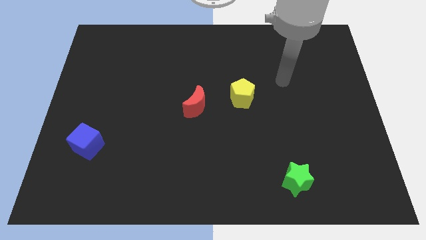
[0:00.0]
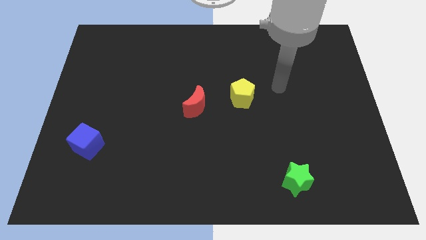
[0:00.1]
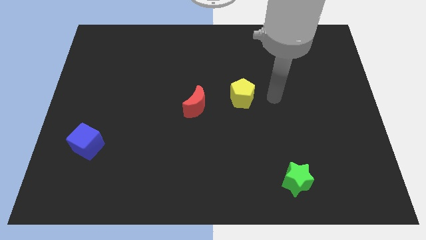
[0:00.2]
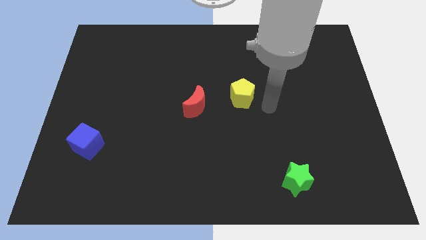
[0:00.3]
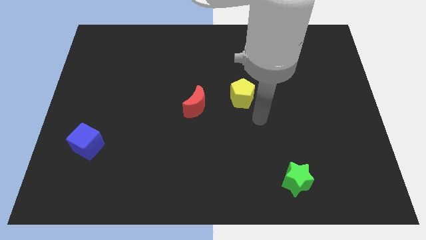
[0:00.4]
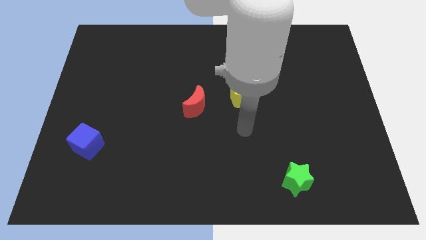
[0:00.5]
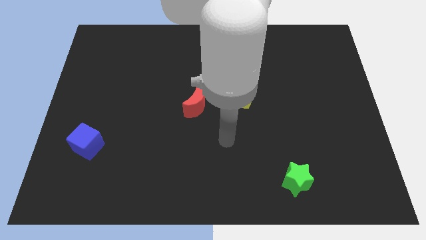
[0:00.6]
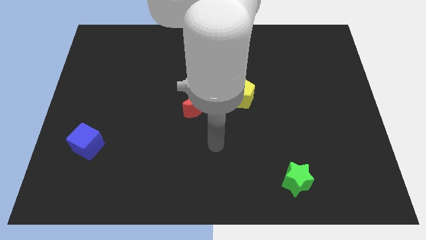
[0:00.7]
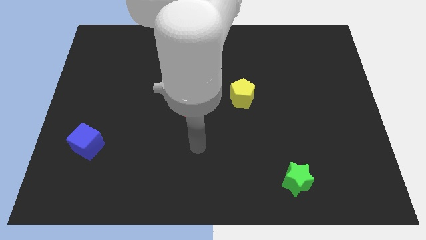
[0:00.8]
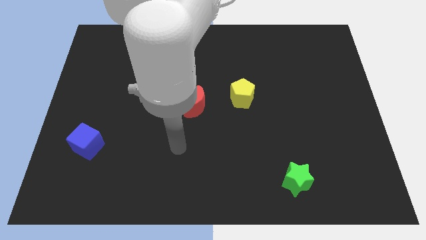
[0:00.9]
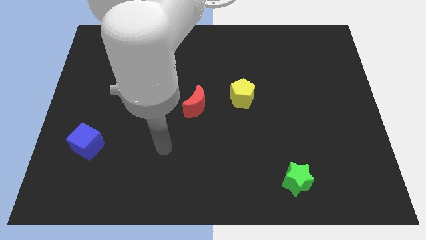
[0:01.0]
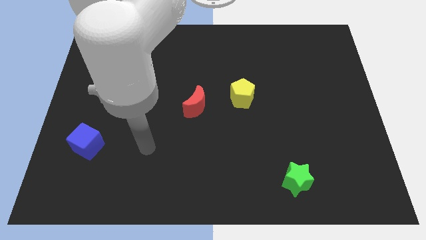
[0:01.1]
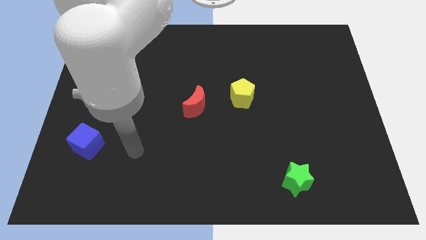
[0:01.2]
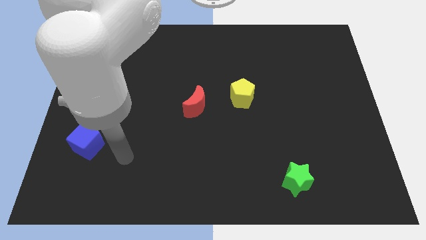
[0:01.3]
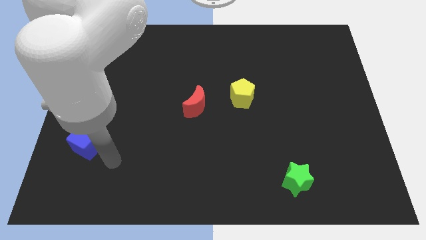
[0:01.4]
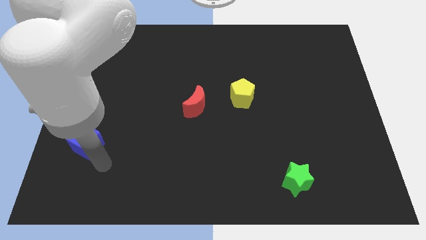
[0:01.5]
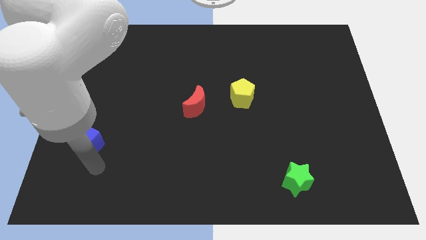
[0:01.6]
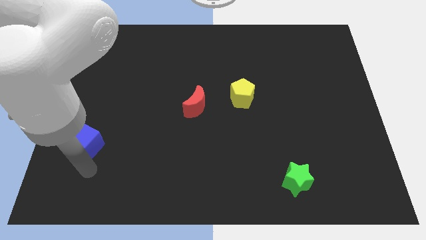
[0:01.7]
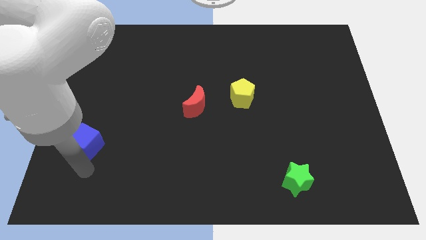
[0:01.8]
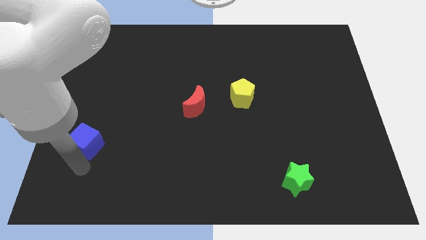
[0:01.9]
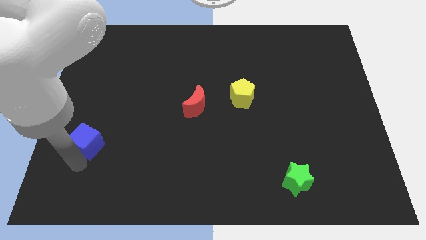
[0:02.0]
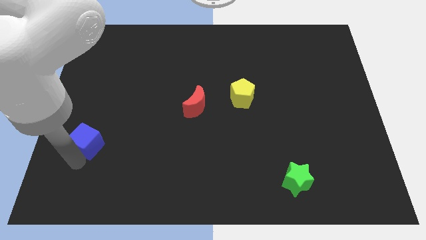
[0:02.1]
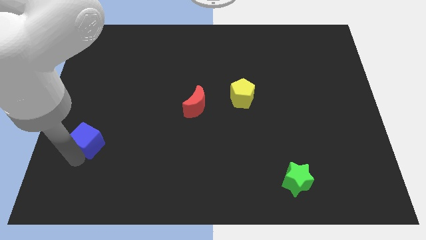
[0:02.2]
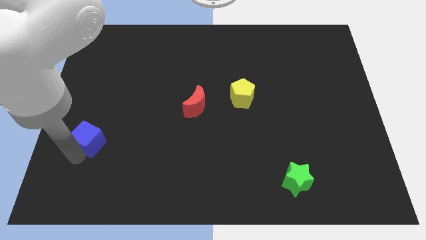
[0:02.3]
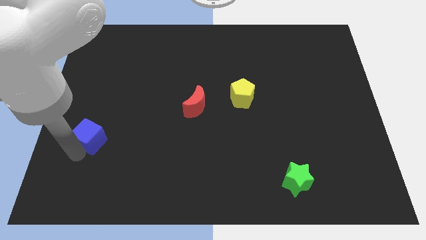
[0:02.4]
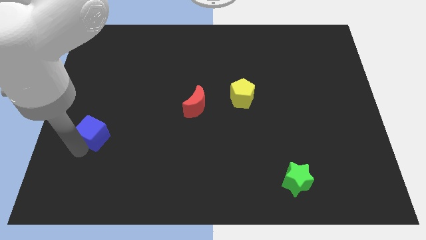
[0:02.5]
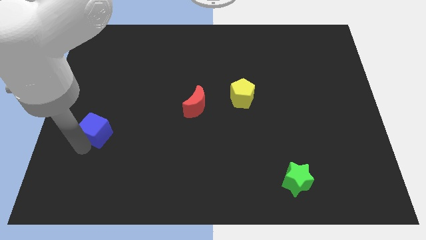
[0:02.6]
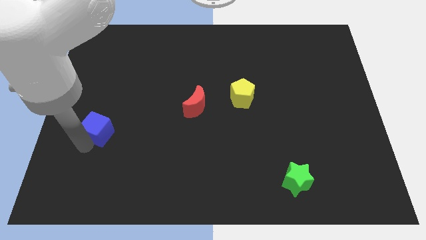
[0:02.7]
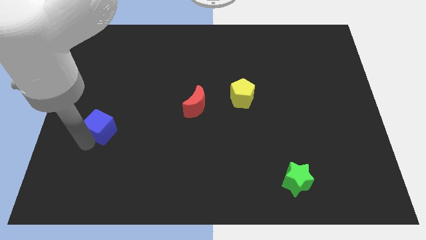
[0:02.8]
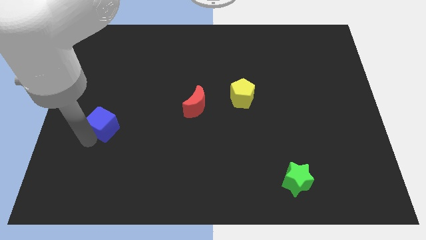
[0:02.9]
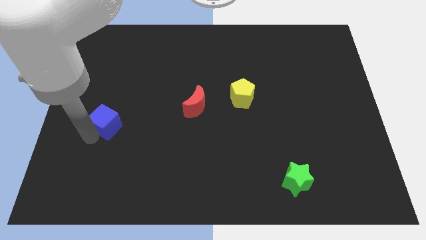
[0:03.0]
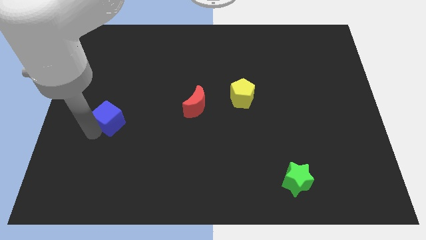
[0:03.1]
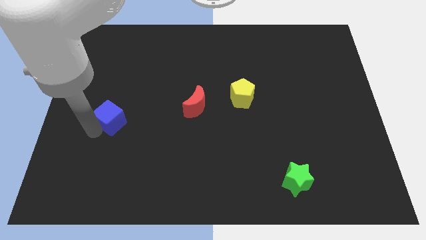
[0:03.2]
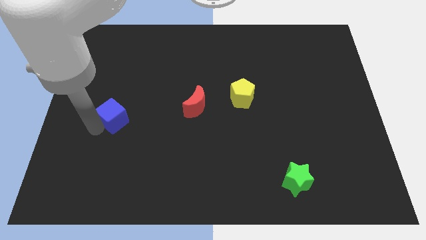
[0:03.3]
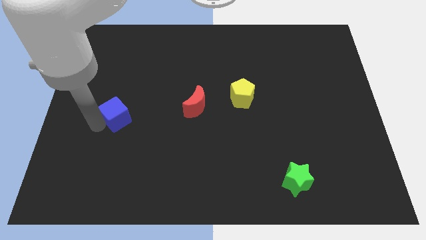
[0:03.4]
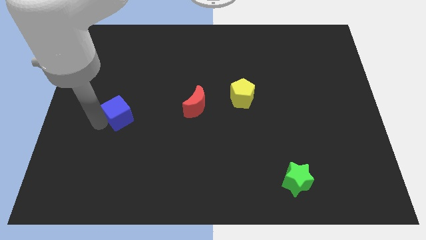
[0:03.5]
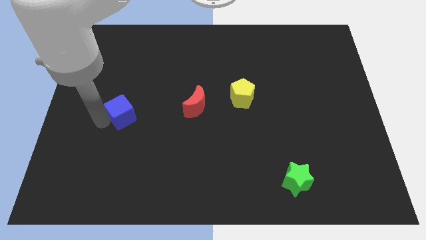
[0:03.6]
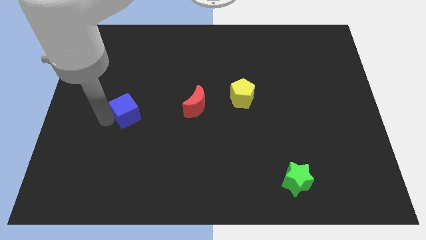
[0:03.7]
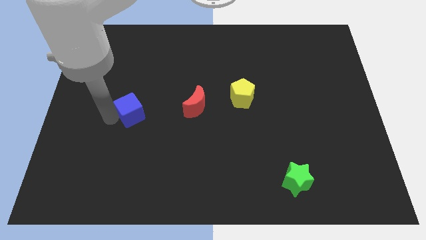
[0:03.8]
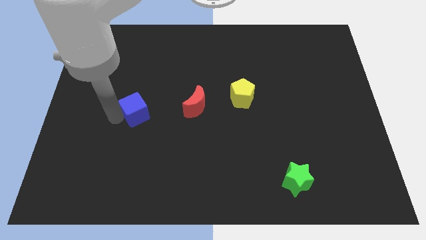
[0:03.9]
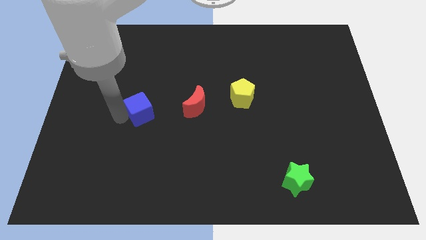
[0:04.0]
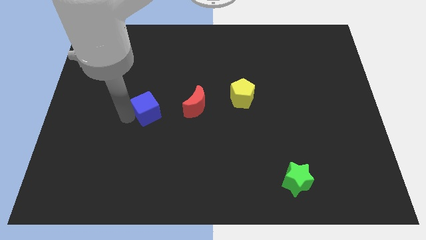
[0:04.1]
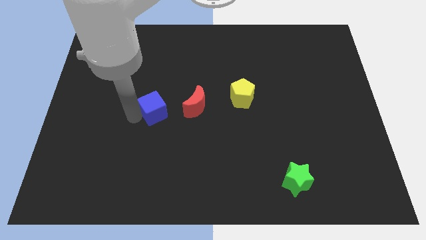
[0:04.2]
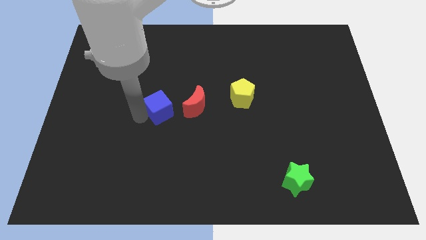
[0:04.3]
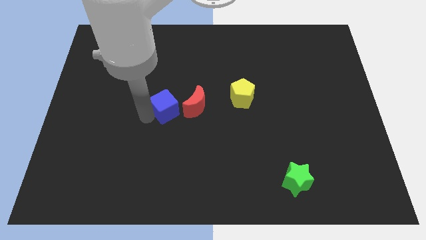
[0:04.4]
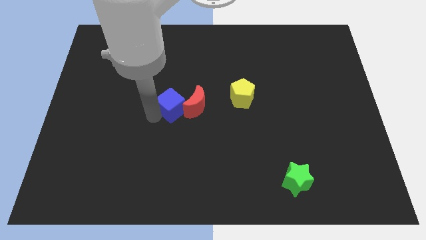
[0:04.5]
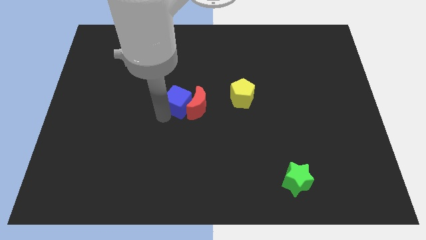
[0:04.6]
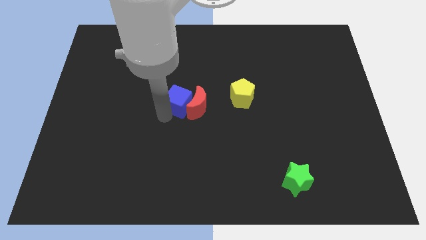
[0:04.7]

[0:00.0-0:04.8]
move the cube next to the red moon

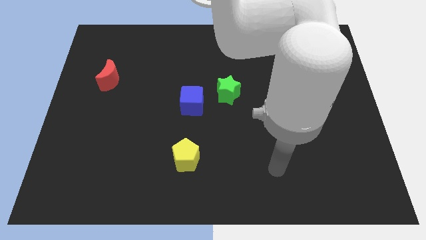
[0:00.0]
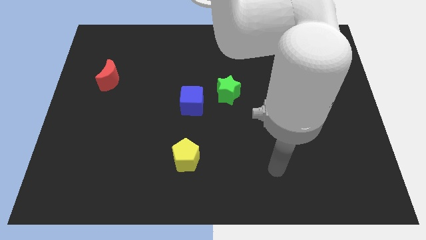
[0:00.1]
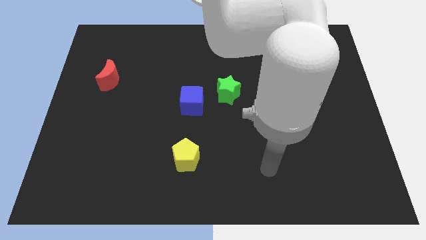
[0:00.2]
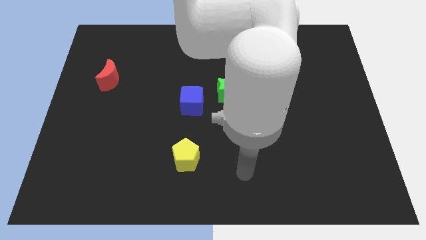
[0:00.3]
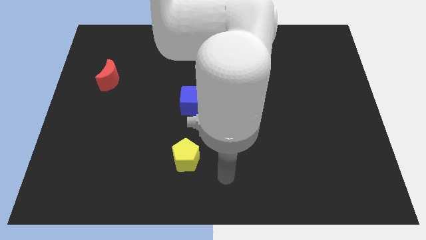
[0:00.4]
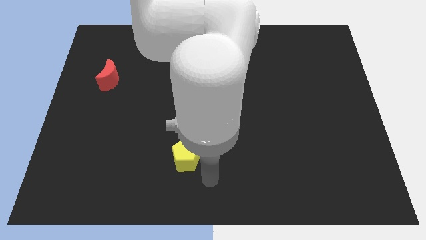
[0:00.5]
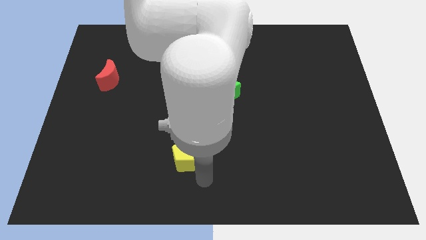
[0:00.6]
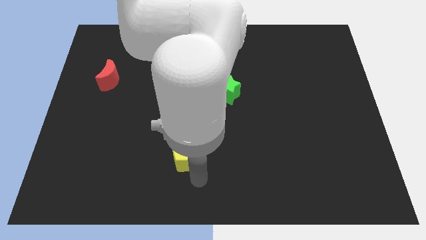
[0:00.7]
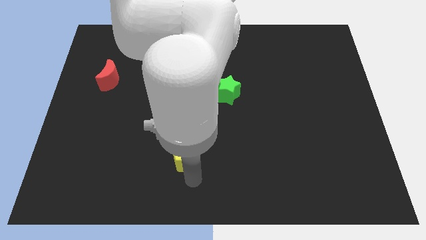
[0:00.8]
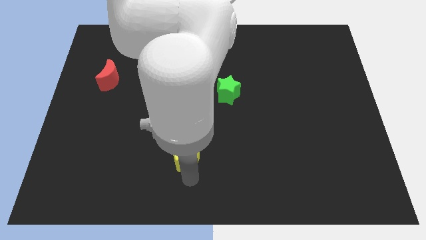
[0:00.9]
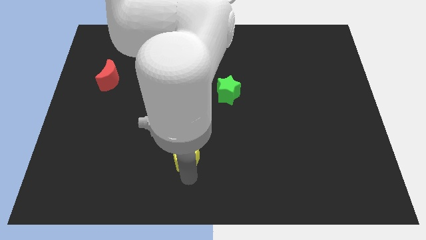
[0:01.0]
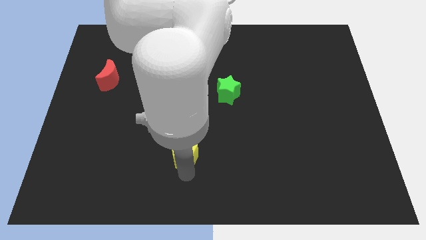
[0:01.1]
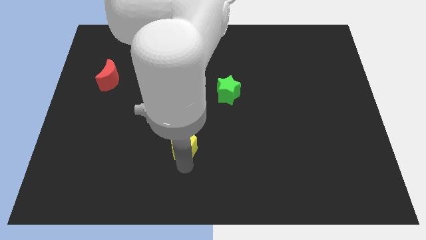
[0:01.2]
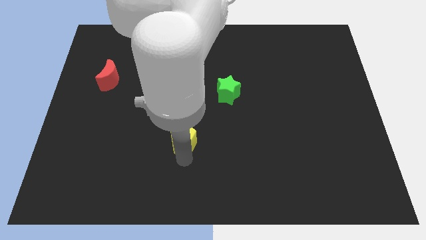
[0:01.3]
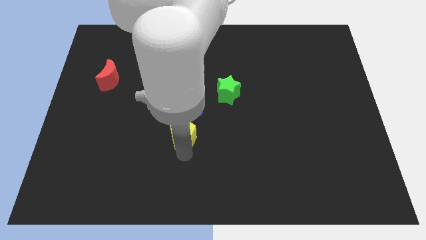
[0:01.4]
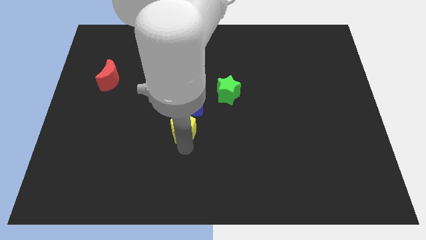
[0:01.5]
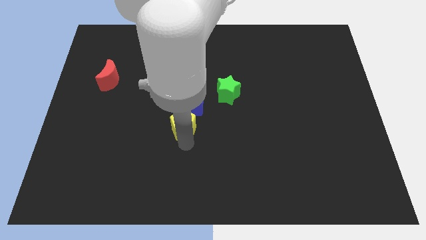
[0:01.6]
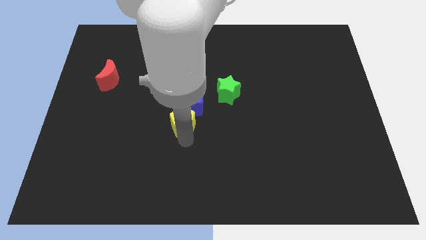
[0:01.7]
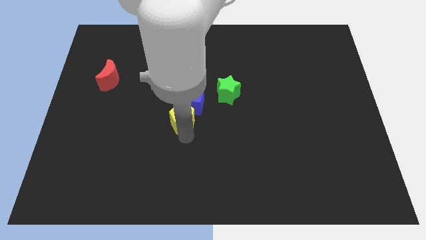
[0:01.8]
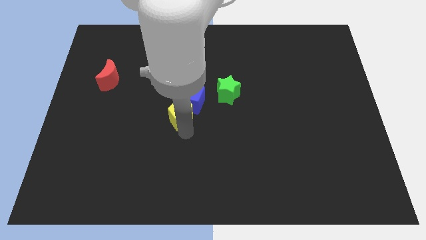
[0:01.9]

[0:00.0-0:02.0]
push the pentagon towards the cube

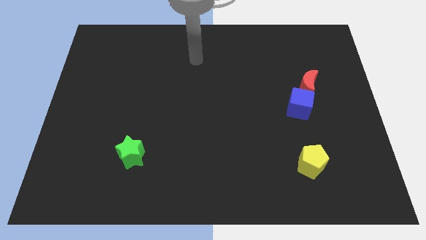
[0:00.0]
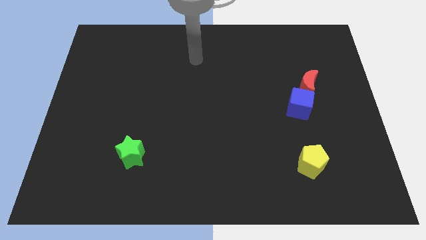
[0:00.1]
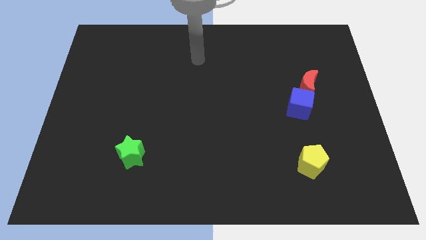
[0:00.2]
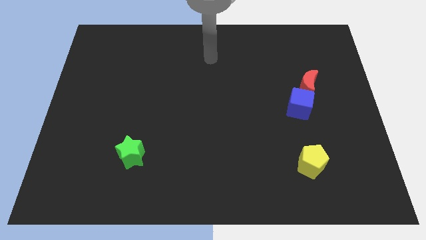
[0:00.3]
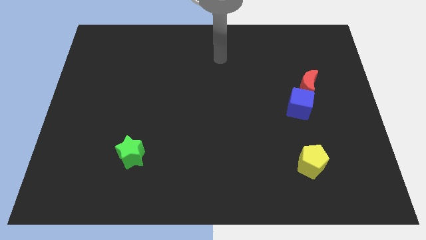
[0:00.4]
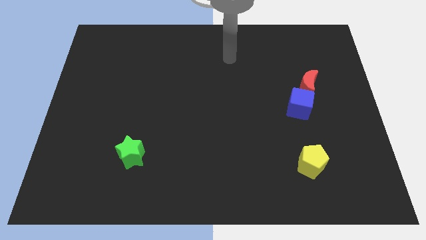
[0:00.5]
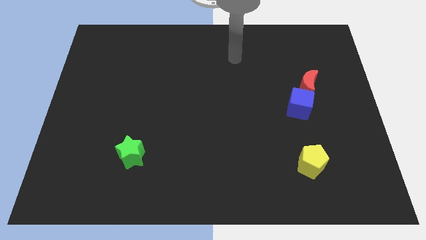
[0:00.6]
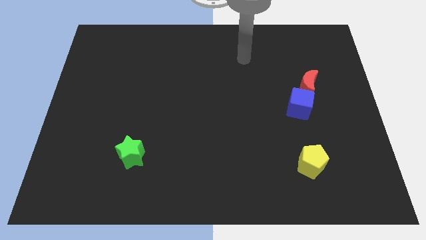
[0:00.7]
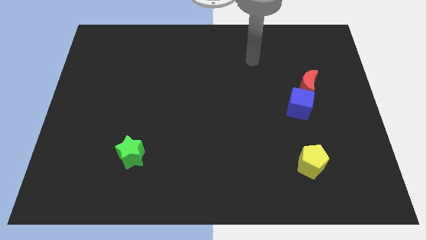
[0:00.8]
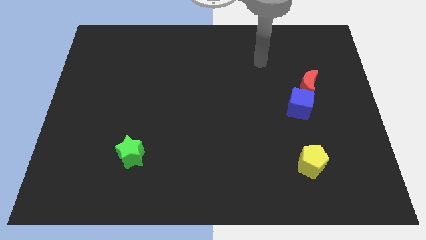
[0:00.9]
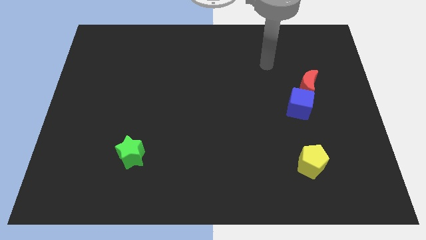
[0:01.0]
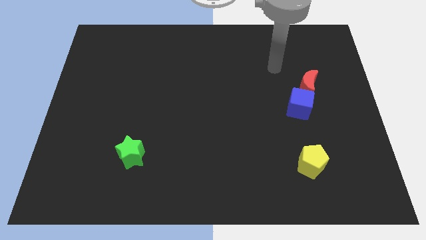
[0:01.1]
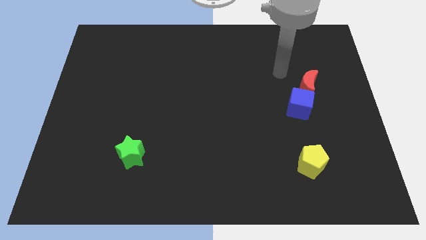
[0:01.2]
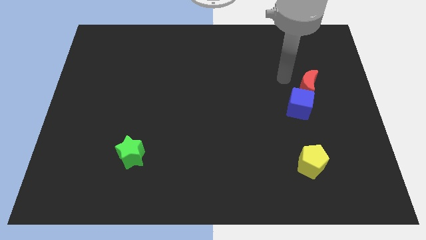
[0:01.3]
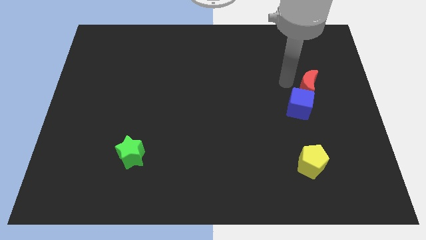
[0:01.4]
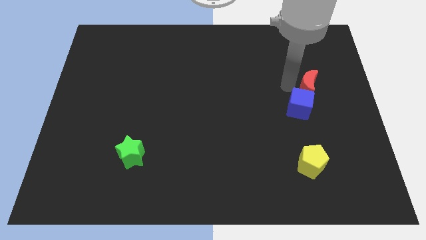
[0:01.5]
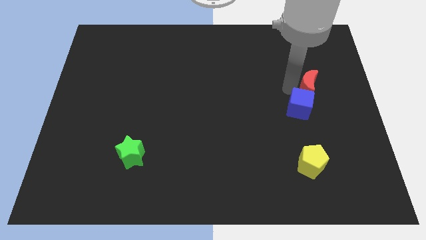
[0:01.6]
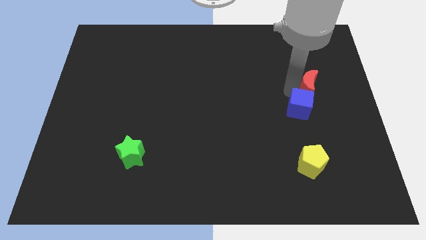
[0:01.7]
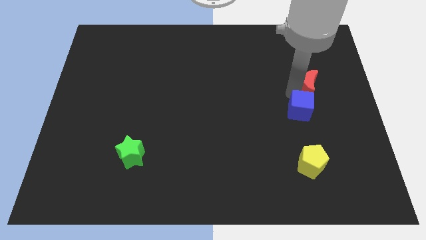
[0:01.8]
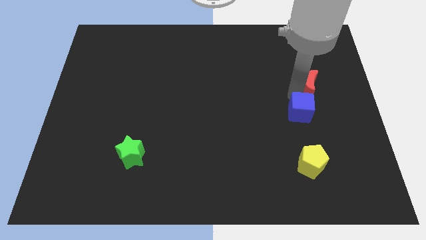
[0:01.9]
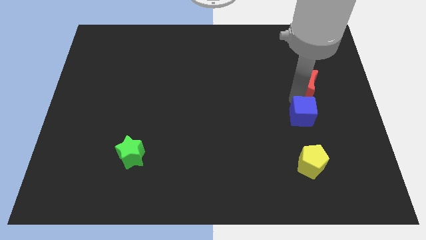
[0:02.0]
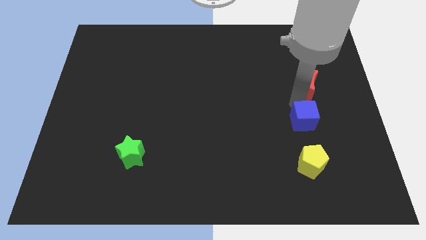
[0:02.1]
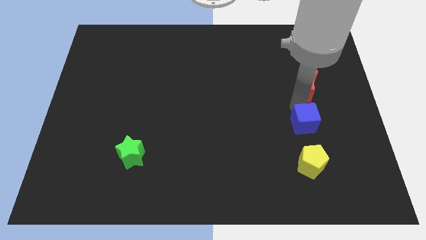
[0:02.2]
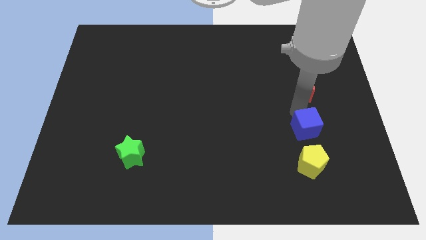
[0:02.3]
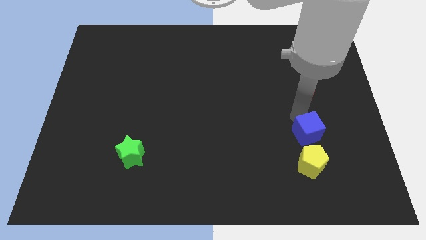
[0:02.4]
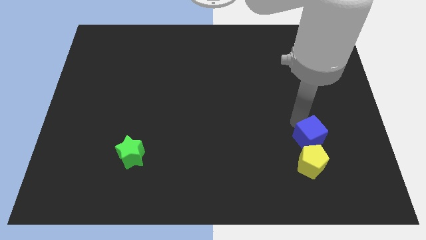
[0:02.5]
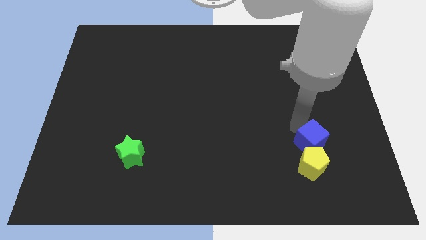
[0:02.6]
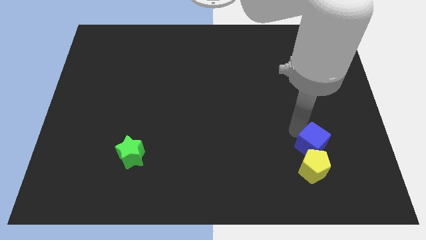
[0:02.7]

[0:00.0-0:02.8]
put the blue block towards the pentagon
